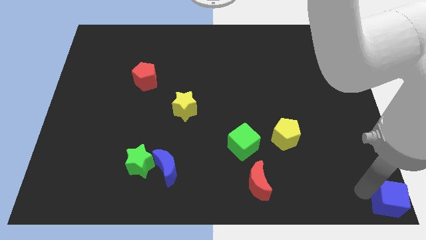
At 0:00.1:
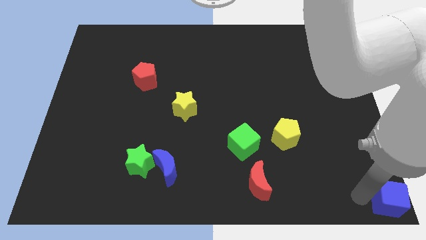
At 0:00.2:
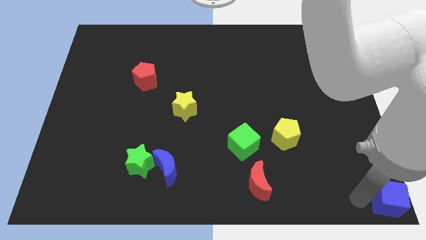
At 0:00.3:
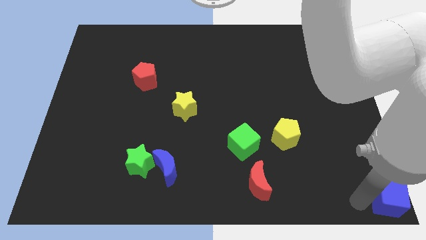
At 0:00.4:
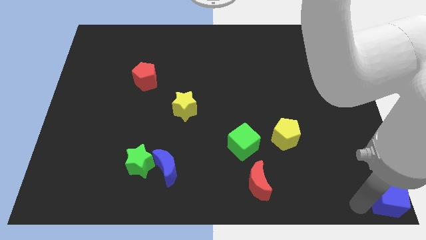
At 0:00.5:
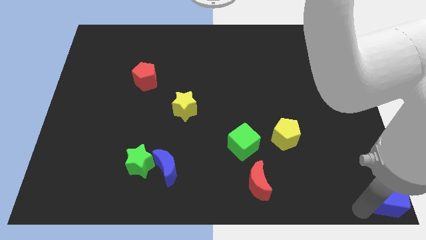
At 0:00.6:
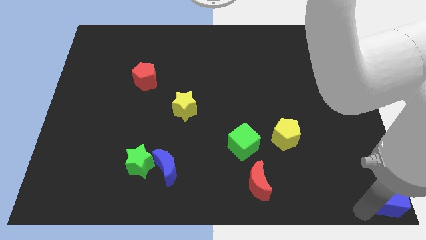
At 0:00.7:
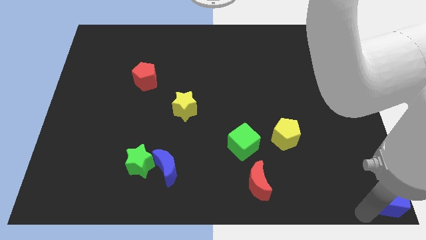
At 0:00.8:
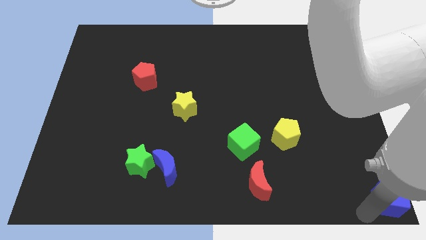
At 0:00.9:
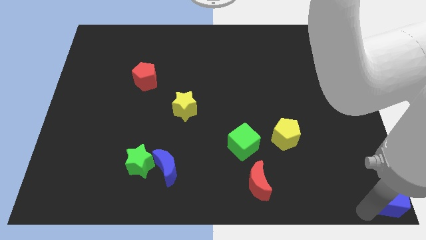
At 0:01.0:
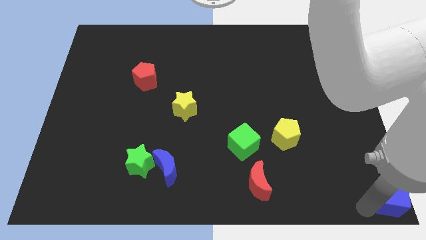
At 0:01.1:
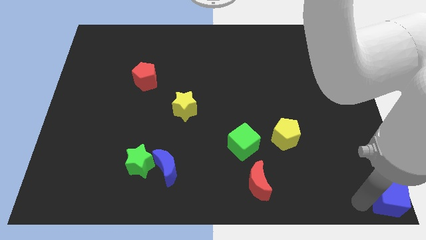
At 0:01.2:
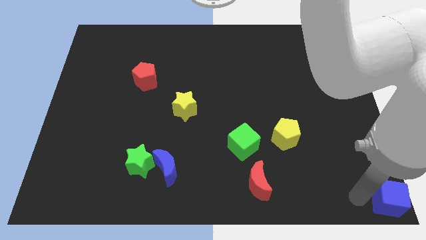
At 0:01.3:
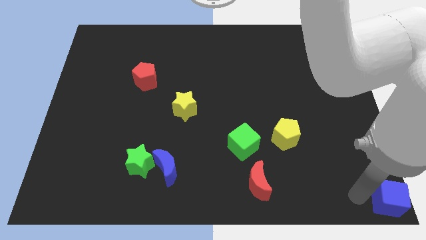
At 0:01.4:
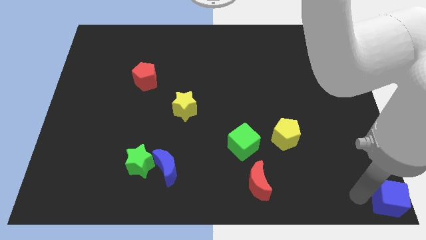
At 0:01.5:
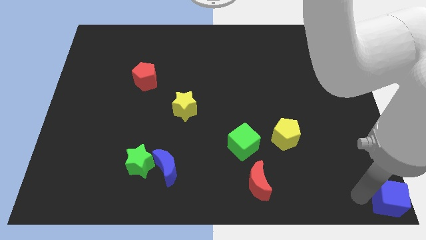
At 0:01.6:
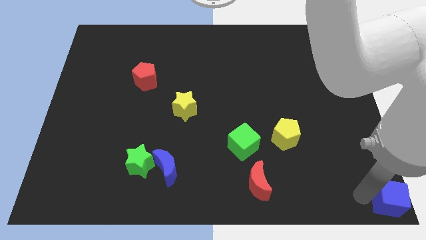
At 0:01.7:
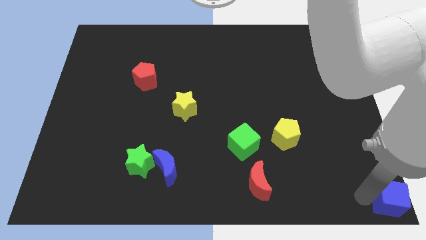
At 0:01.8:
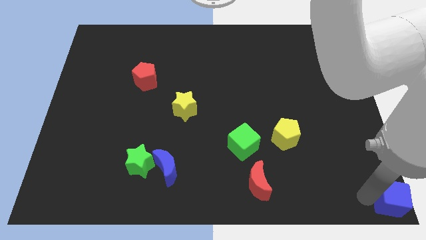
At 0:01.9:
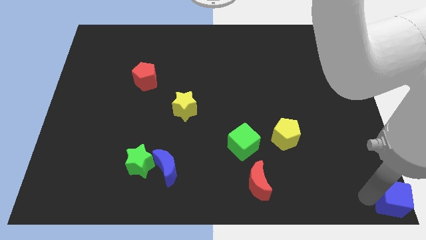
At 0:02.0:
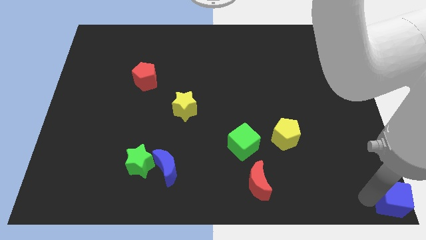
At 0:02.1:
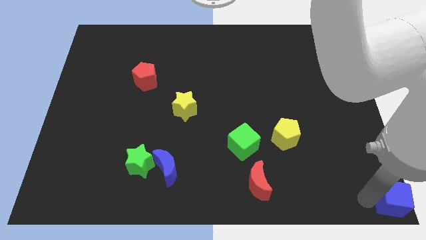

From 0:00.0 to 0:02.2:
push the blue cube to the bottom right corner

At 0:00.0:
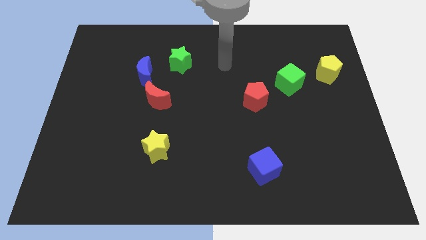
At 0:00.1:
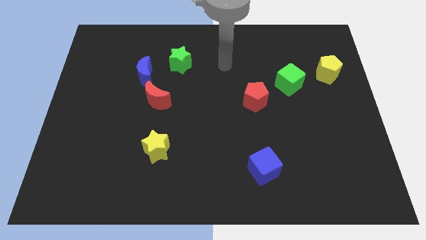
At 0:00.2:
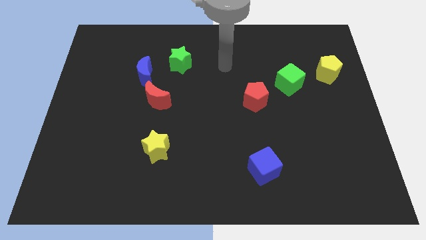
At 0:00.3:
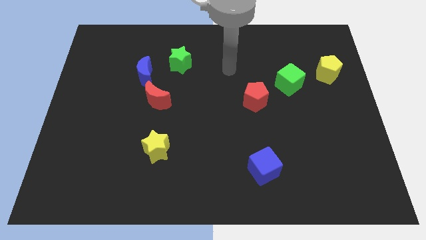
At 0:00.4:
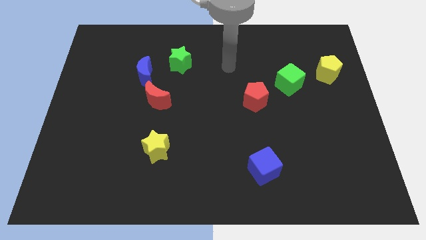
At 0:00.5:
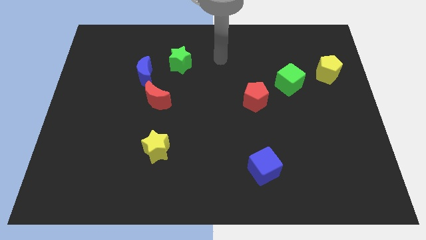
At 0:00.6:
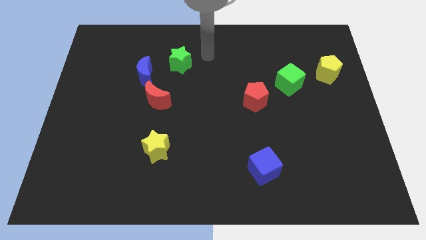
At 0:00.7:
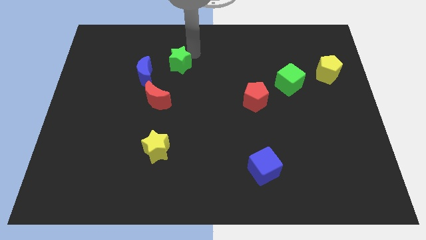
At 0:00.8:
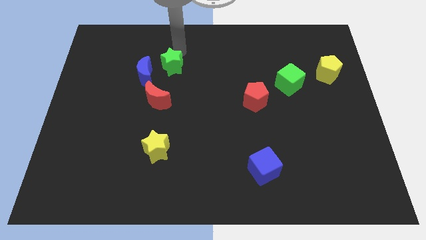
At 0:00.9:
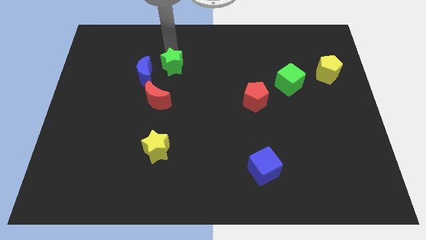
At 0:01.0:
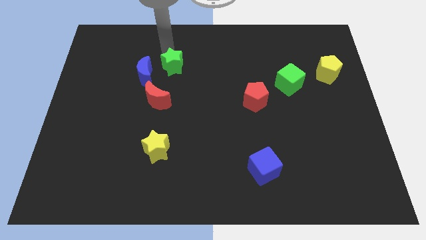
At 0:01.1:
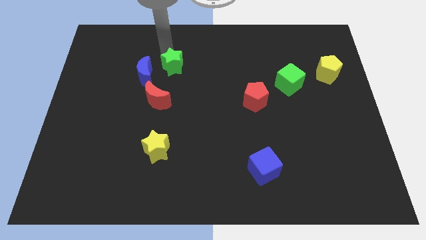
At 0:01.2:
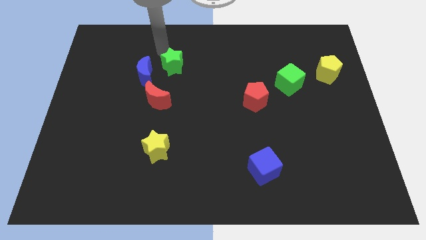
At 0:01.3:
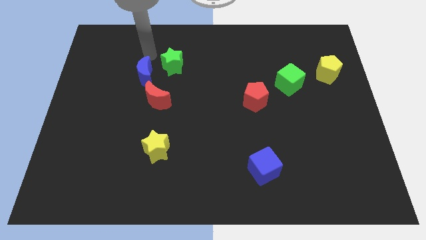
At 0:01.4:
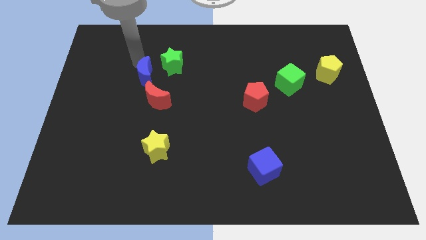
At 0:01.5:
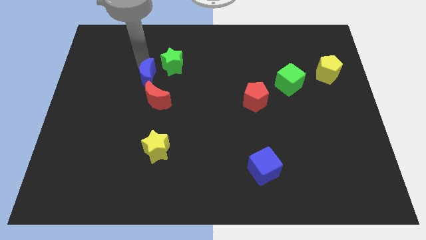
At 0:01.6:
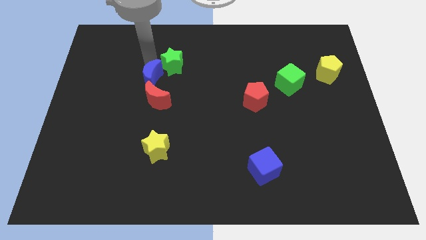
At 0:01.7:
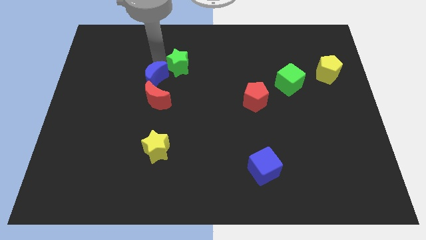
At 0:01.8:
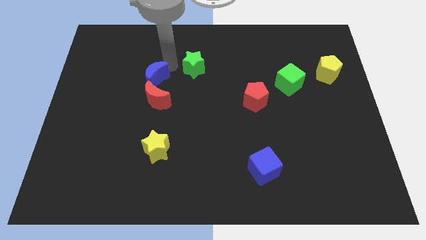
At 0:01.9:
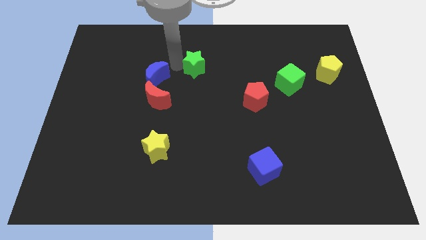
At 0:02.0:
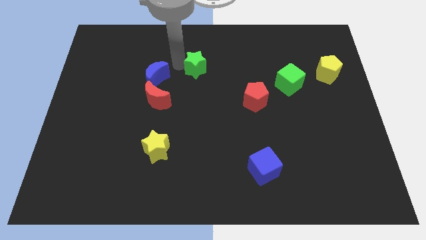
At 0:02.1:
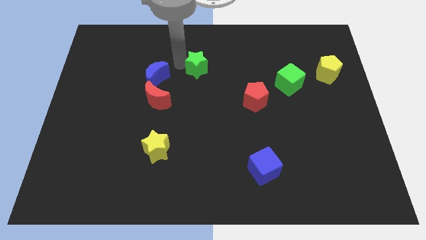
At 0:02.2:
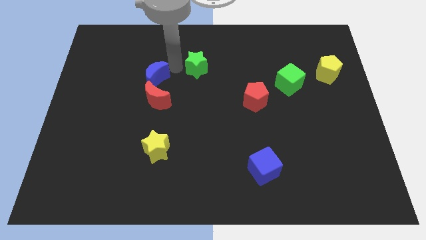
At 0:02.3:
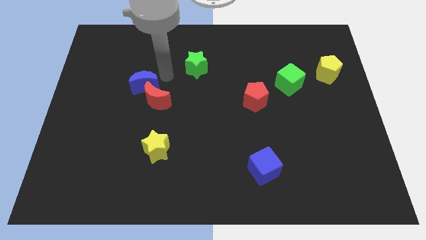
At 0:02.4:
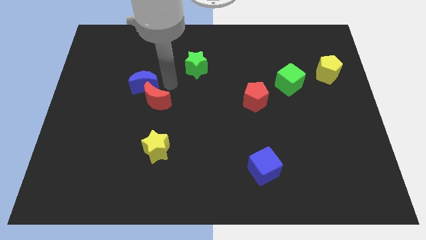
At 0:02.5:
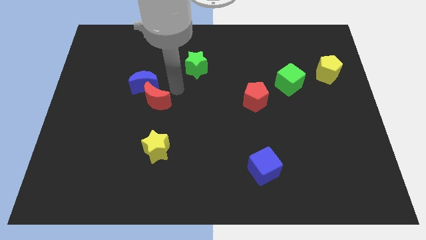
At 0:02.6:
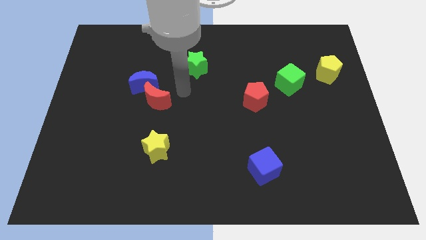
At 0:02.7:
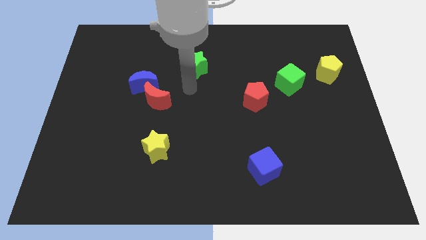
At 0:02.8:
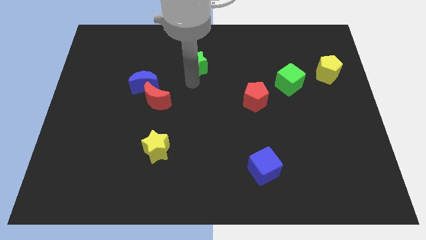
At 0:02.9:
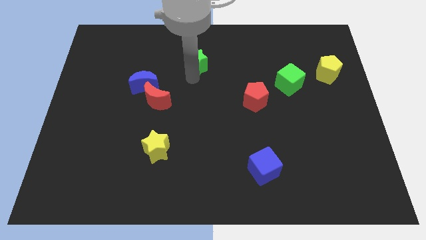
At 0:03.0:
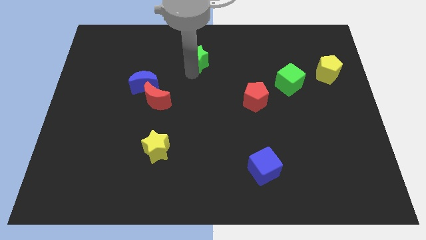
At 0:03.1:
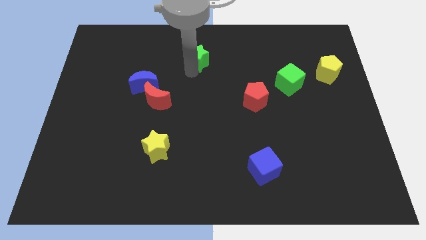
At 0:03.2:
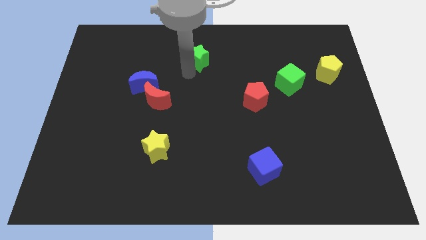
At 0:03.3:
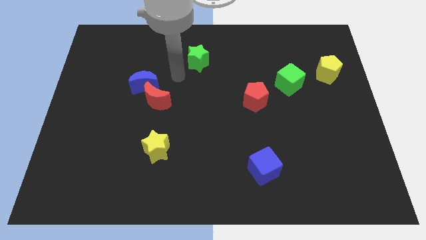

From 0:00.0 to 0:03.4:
move the green star to the top center of the board

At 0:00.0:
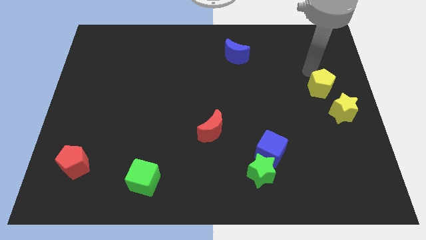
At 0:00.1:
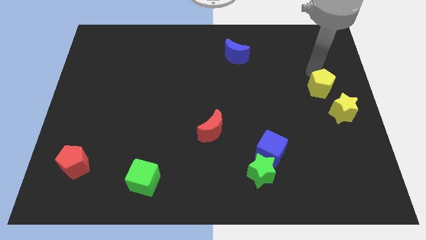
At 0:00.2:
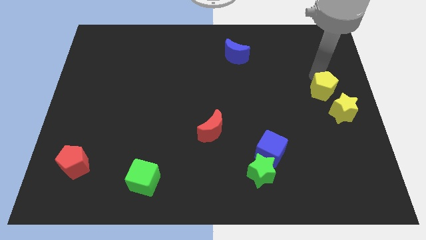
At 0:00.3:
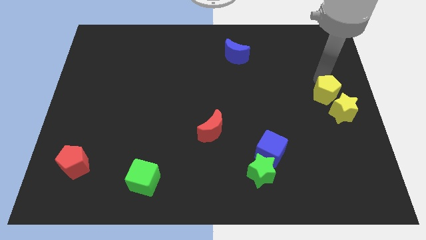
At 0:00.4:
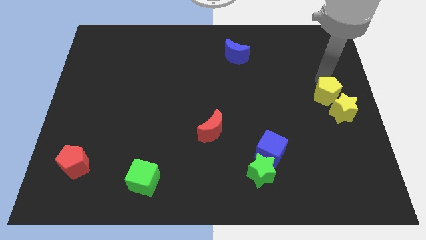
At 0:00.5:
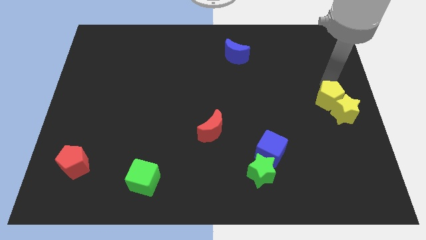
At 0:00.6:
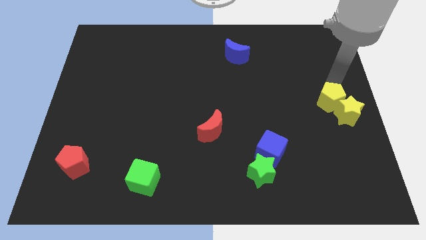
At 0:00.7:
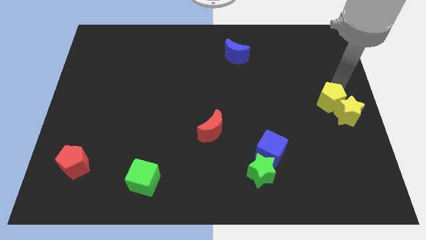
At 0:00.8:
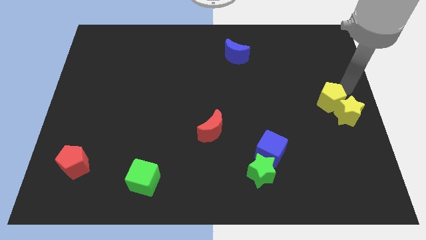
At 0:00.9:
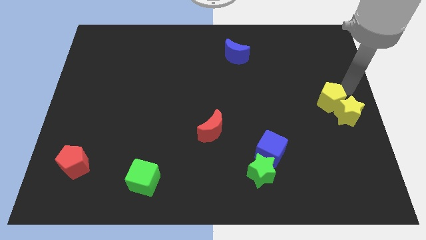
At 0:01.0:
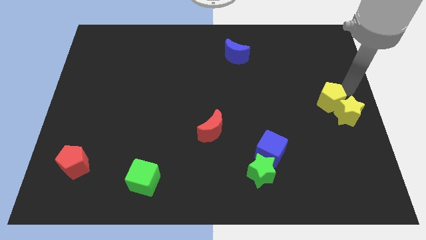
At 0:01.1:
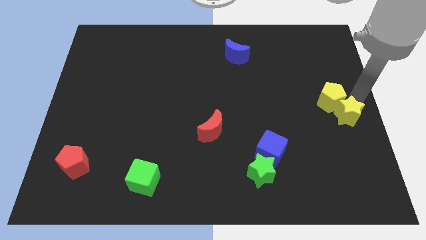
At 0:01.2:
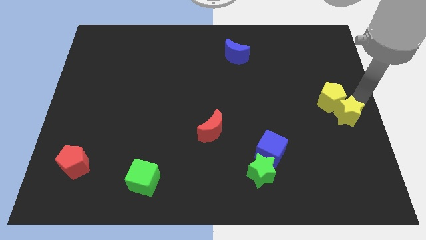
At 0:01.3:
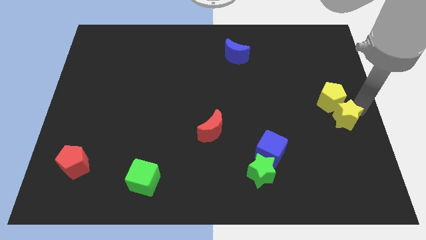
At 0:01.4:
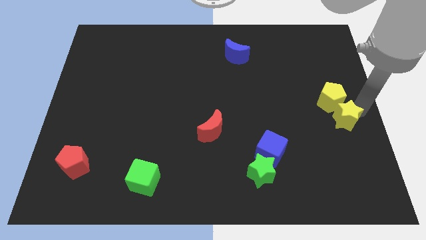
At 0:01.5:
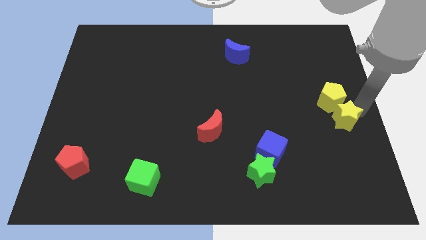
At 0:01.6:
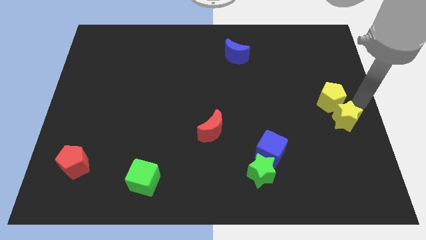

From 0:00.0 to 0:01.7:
push yellow pentagon into yellow star

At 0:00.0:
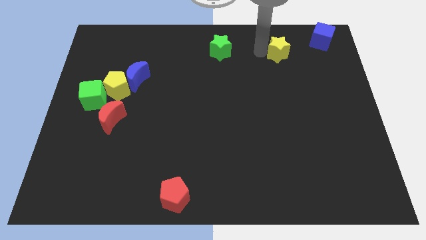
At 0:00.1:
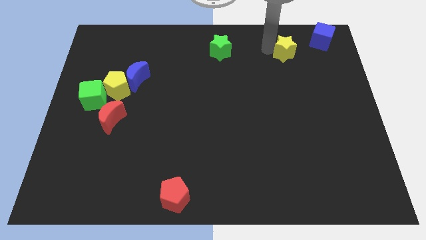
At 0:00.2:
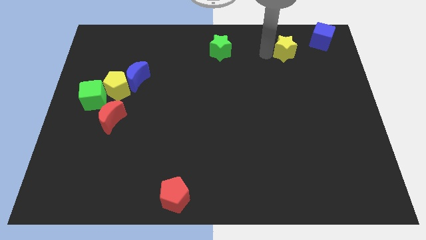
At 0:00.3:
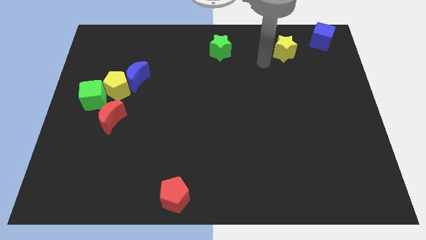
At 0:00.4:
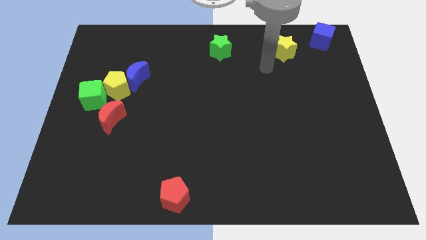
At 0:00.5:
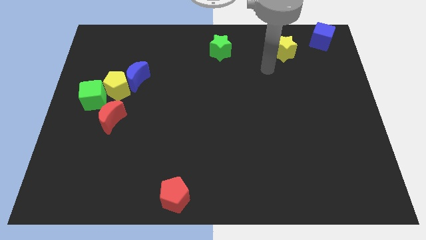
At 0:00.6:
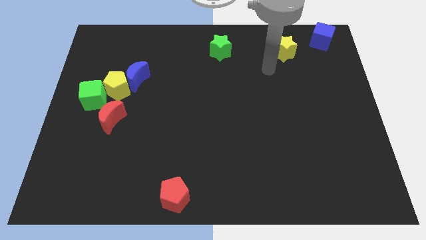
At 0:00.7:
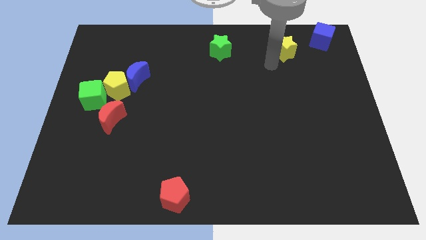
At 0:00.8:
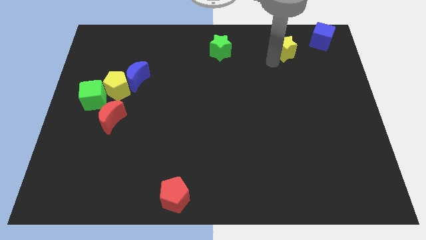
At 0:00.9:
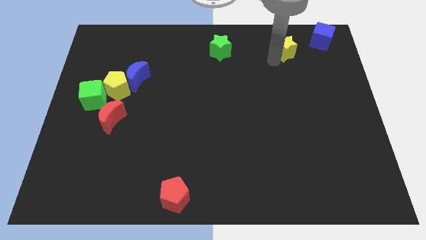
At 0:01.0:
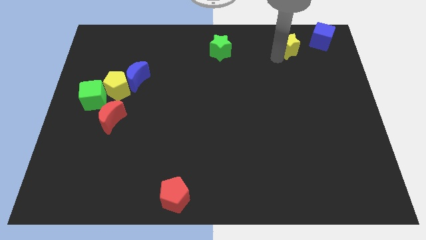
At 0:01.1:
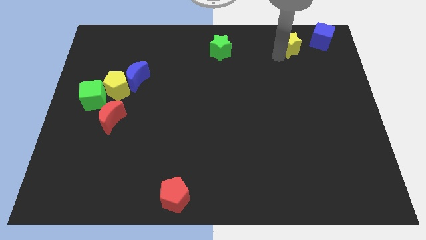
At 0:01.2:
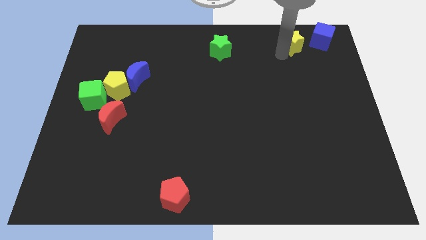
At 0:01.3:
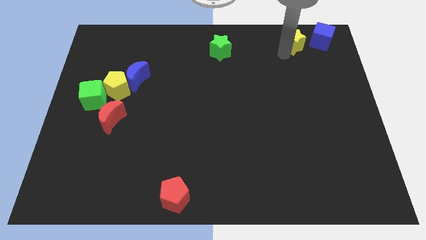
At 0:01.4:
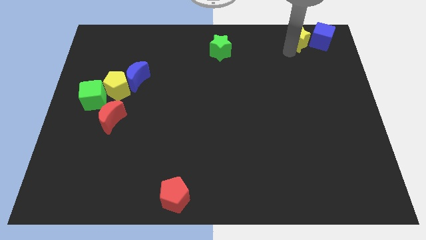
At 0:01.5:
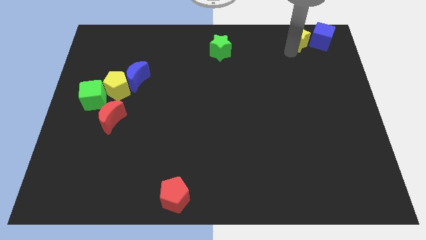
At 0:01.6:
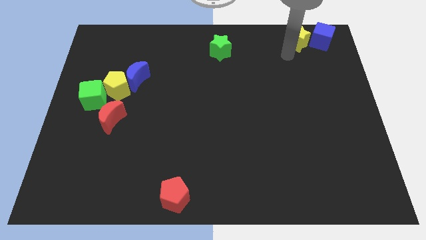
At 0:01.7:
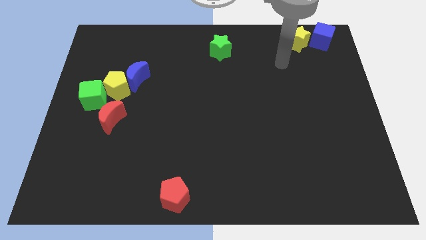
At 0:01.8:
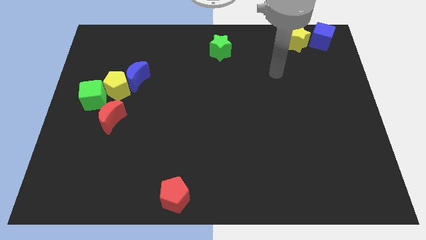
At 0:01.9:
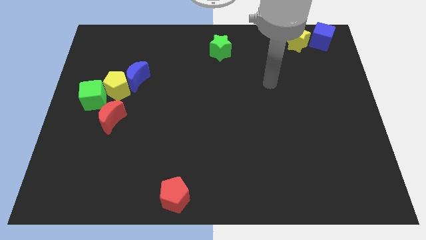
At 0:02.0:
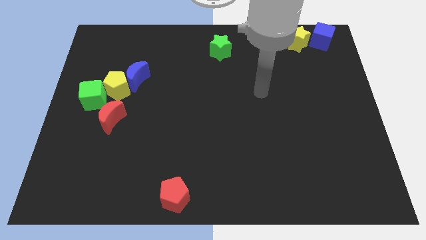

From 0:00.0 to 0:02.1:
place yellow star beside blue cube
